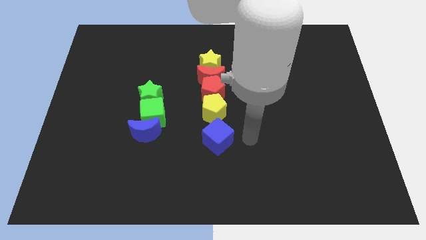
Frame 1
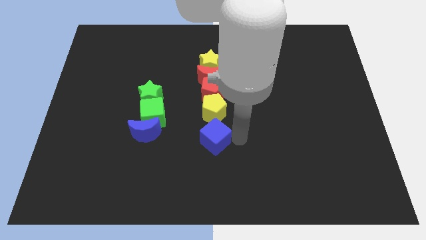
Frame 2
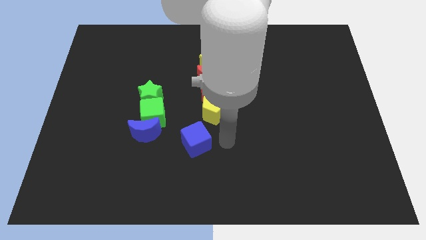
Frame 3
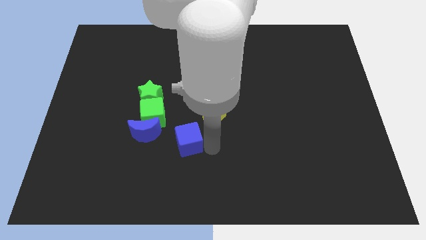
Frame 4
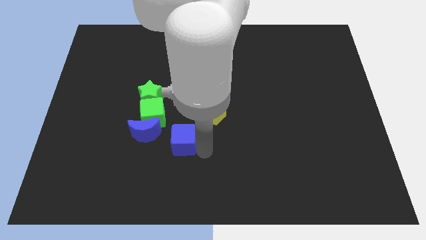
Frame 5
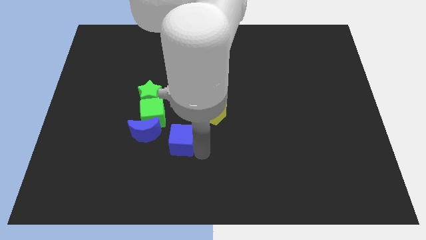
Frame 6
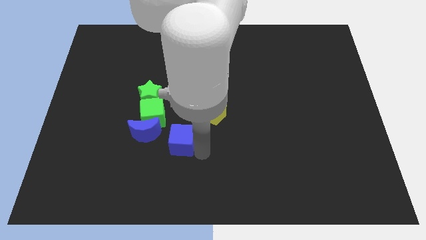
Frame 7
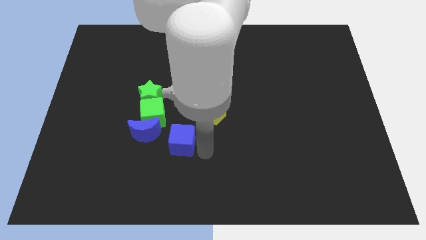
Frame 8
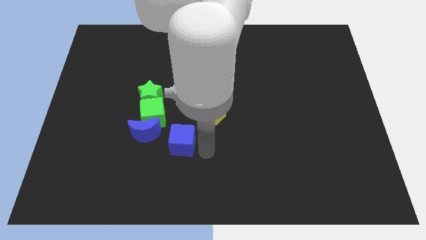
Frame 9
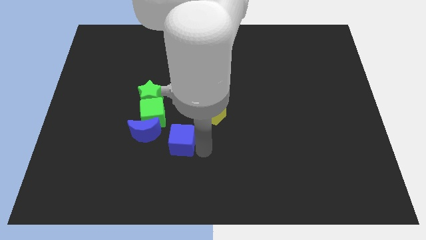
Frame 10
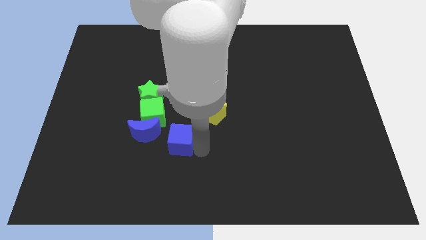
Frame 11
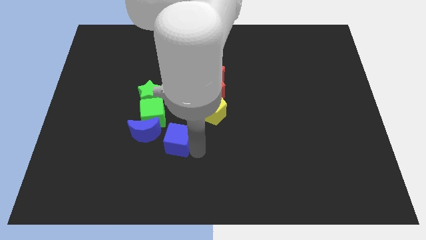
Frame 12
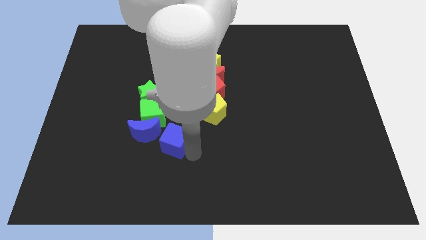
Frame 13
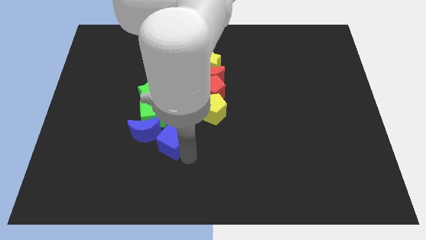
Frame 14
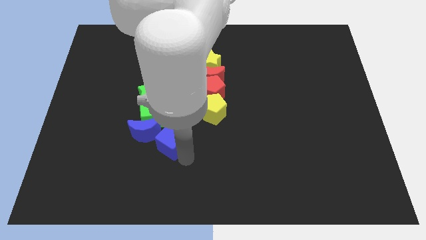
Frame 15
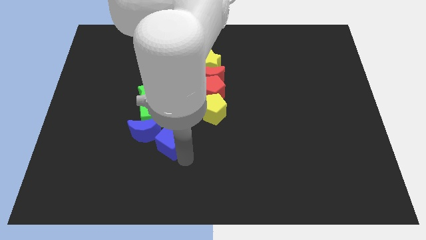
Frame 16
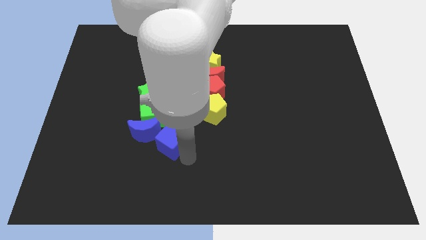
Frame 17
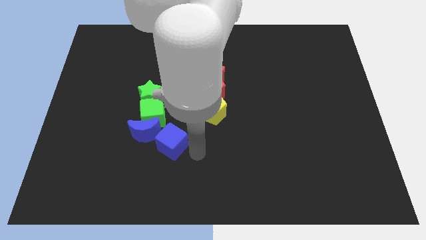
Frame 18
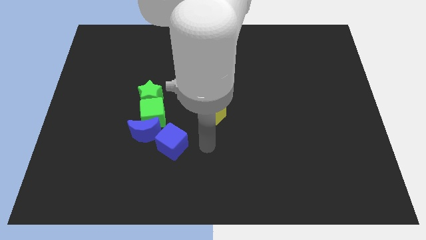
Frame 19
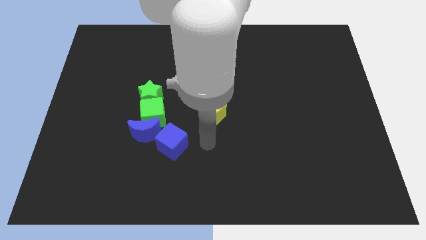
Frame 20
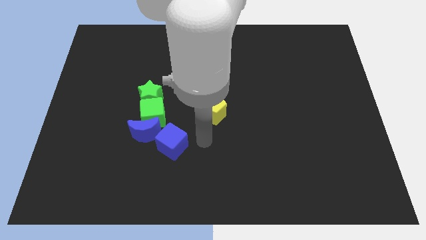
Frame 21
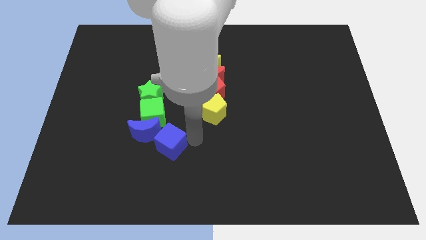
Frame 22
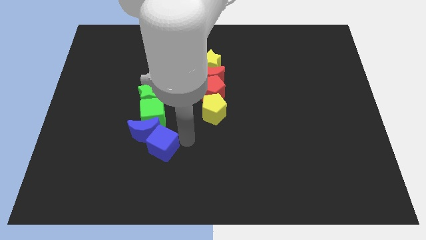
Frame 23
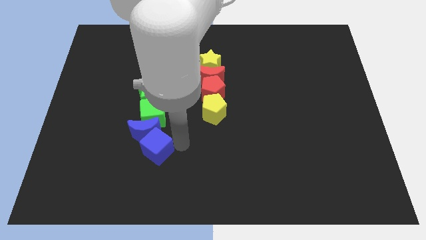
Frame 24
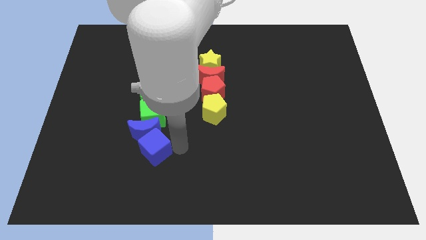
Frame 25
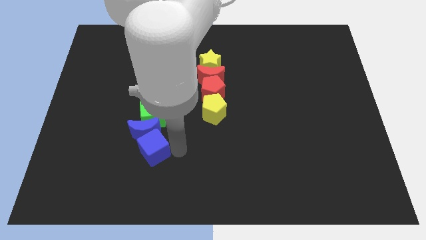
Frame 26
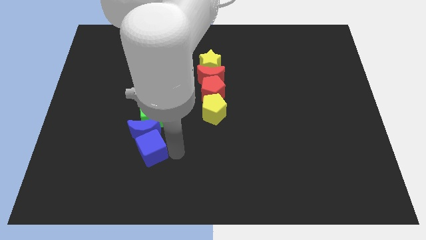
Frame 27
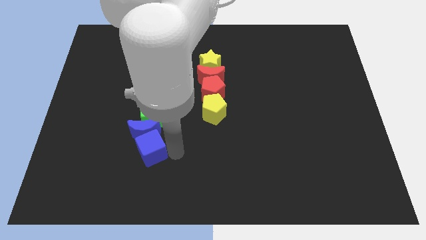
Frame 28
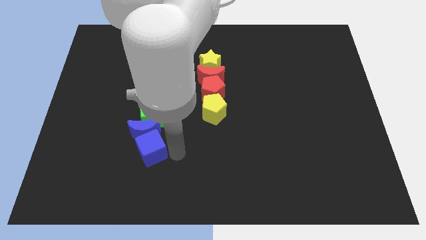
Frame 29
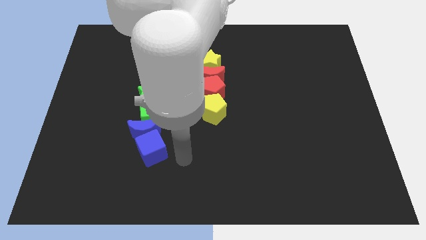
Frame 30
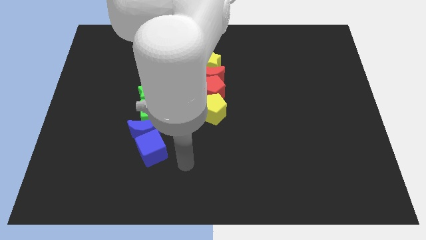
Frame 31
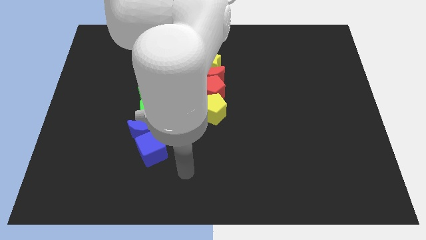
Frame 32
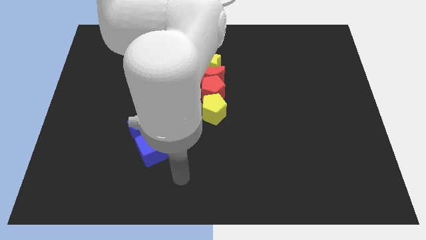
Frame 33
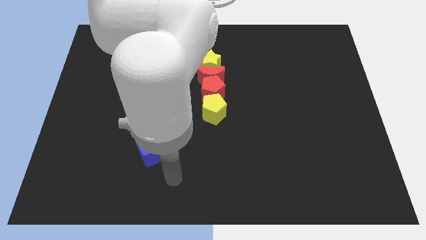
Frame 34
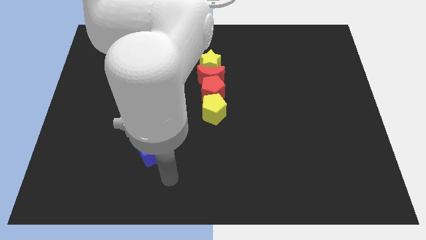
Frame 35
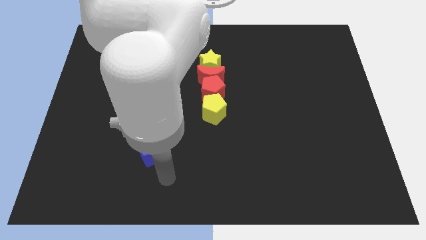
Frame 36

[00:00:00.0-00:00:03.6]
place the blue cube below the blue crescent

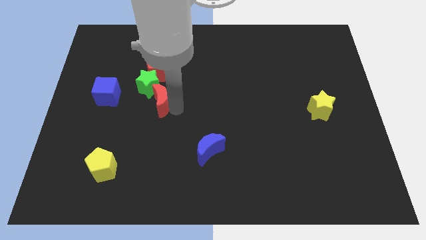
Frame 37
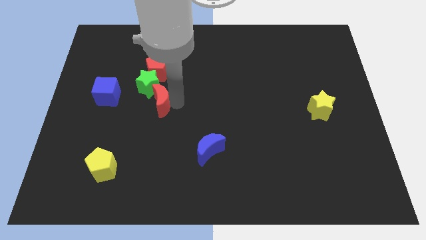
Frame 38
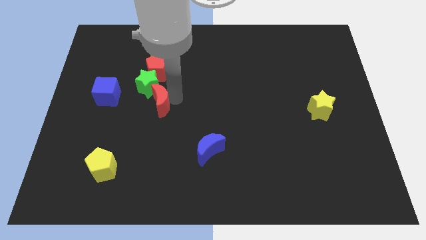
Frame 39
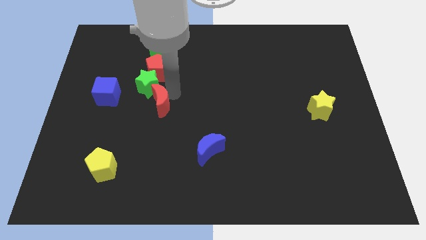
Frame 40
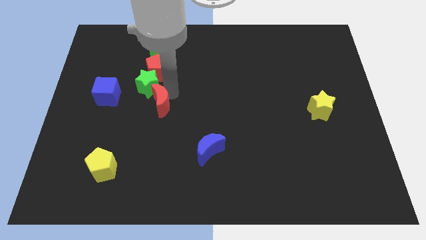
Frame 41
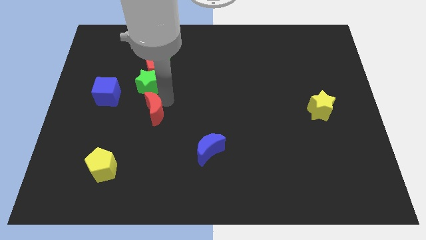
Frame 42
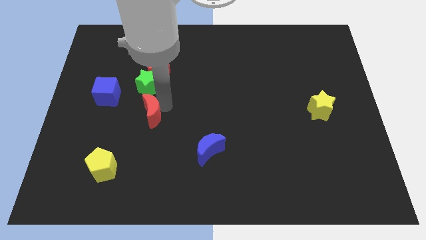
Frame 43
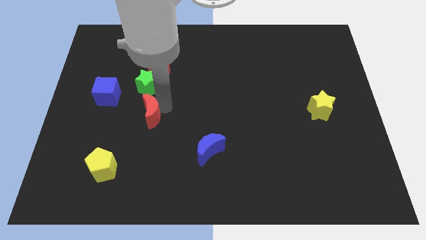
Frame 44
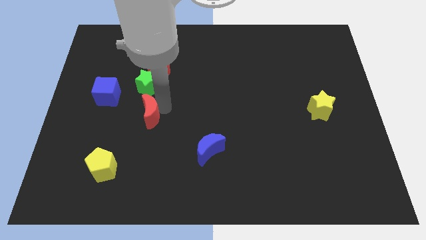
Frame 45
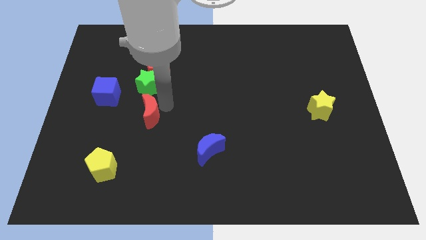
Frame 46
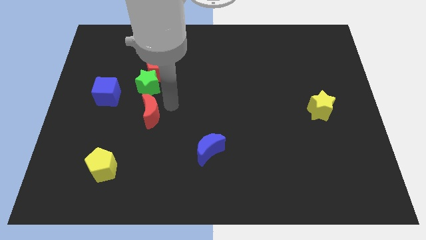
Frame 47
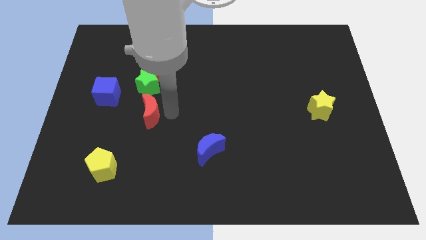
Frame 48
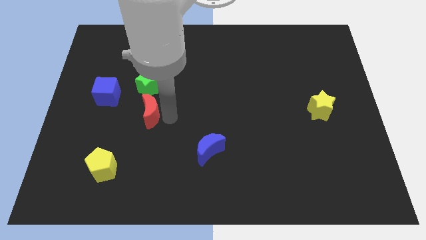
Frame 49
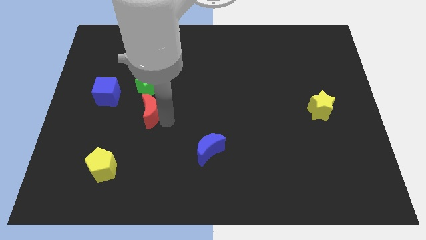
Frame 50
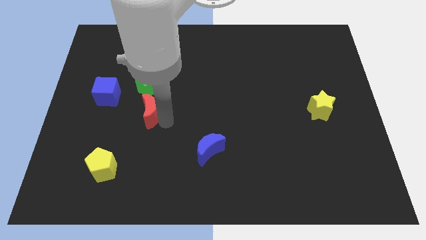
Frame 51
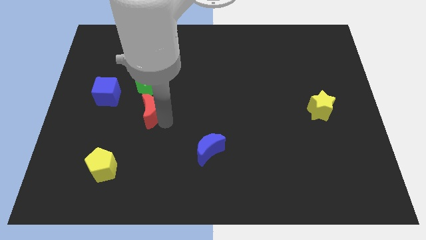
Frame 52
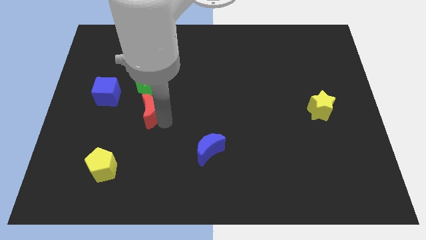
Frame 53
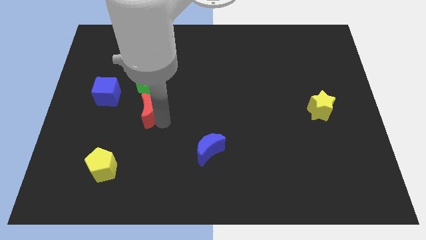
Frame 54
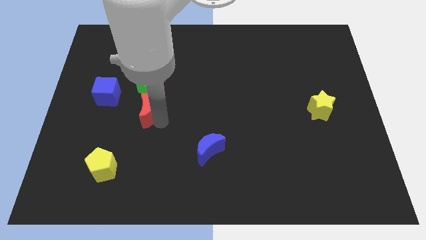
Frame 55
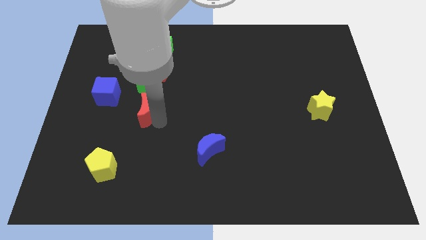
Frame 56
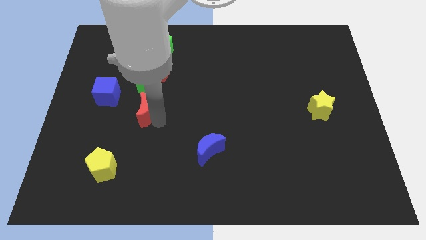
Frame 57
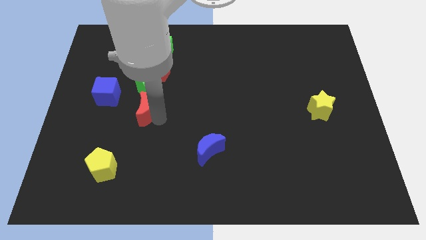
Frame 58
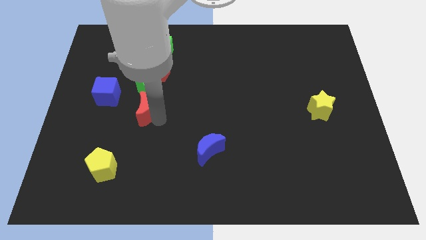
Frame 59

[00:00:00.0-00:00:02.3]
place red moon to the bottom of green star

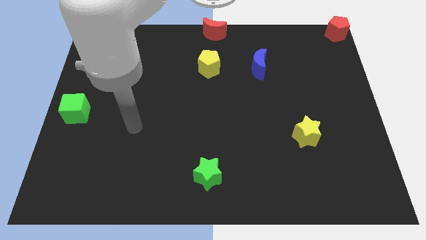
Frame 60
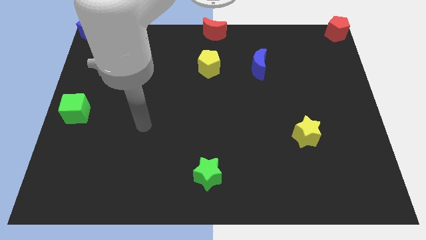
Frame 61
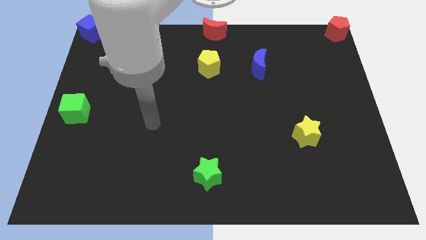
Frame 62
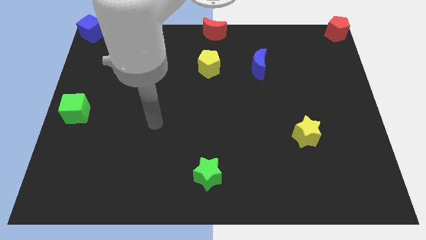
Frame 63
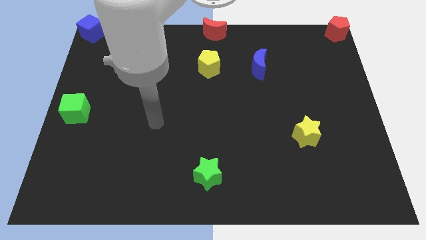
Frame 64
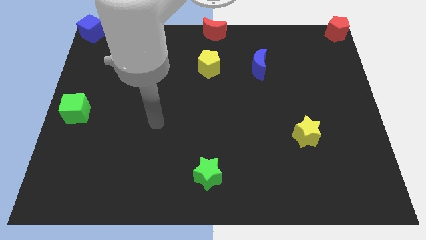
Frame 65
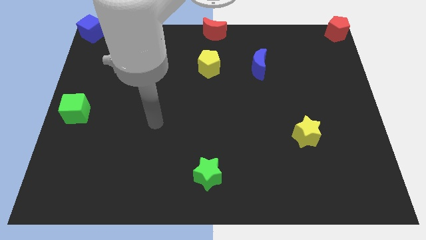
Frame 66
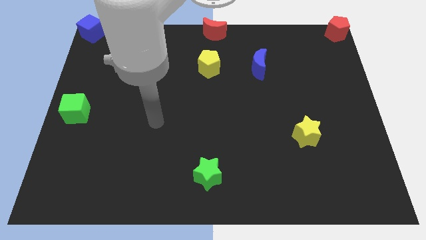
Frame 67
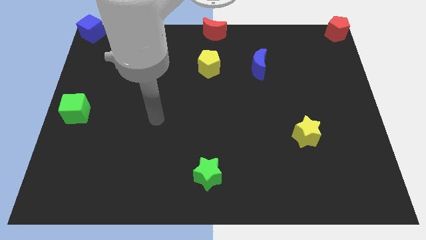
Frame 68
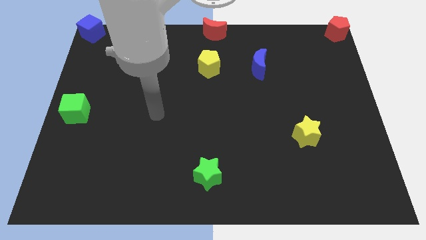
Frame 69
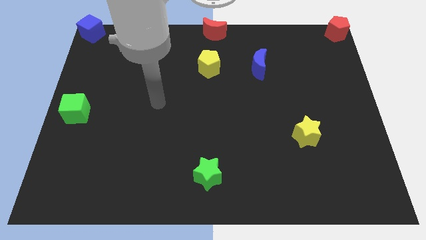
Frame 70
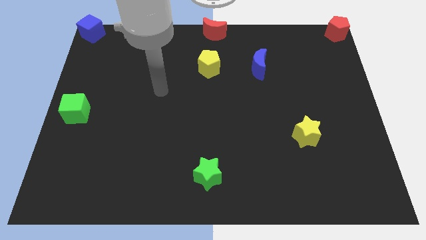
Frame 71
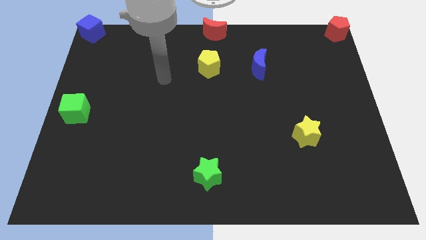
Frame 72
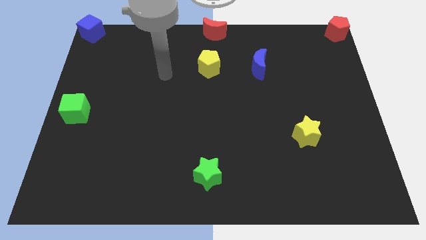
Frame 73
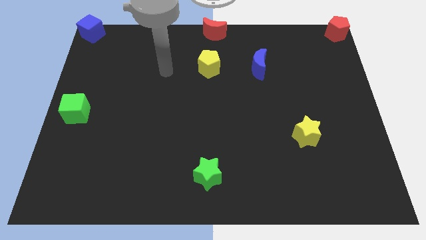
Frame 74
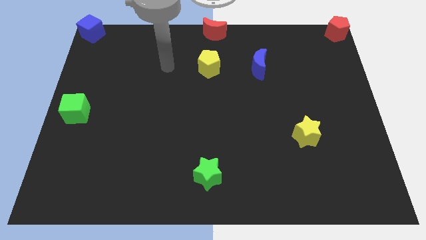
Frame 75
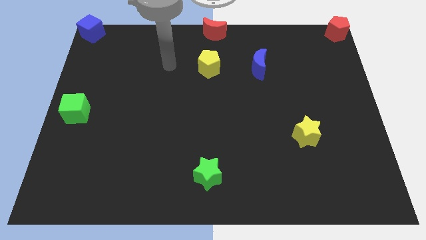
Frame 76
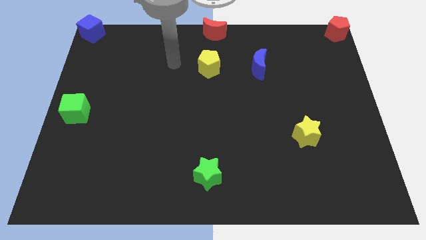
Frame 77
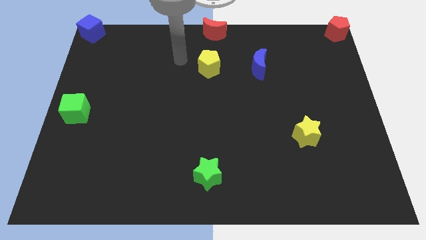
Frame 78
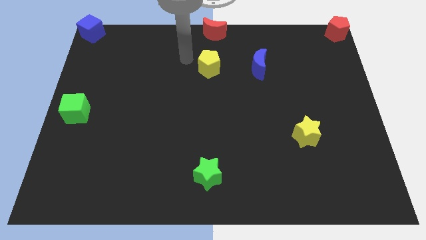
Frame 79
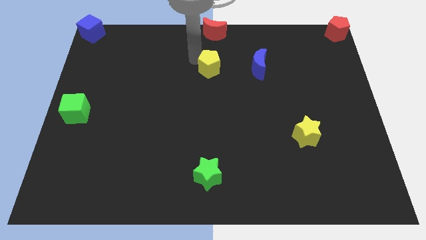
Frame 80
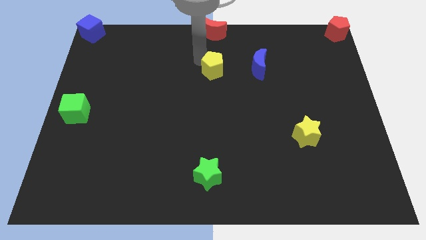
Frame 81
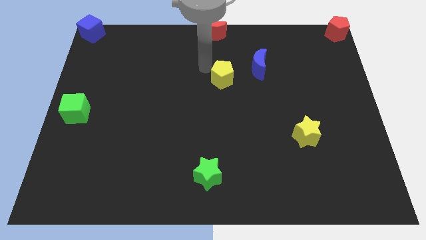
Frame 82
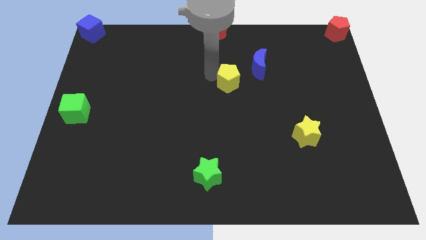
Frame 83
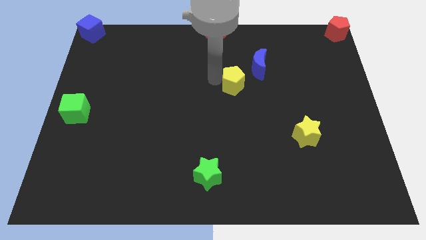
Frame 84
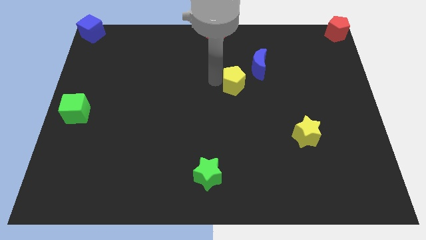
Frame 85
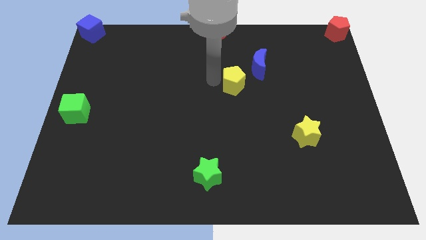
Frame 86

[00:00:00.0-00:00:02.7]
move the yellow pentagon to left side of the blue moon

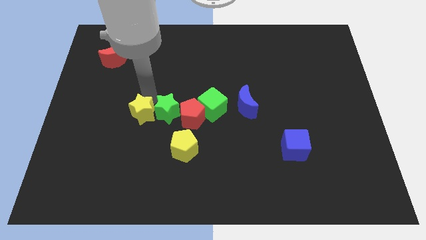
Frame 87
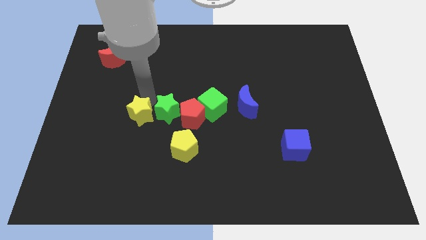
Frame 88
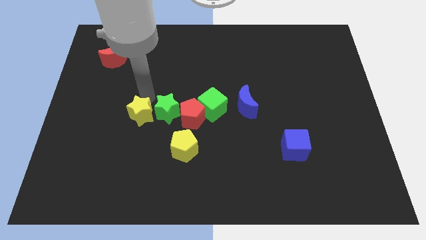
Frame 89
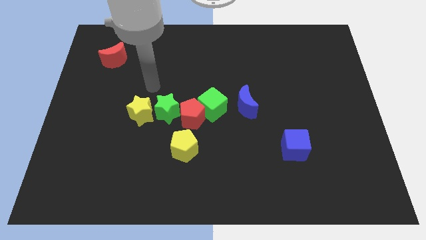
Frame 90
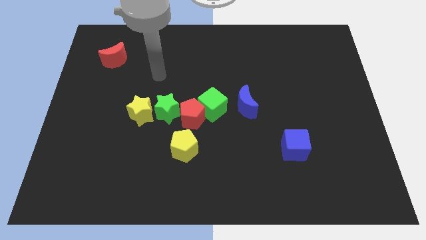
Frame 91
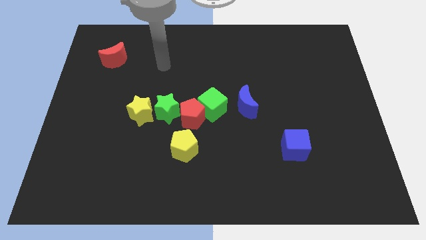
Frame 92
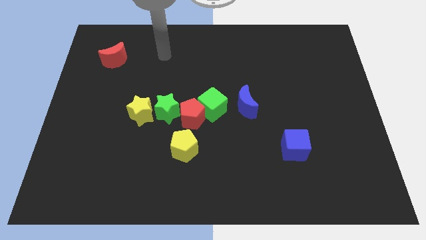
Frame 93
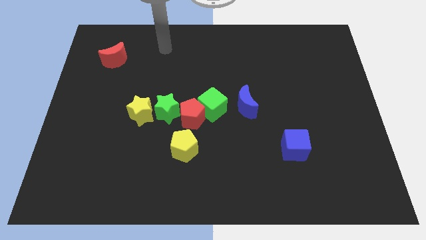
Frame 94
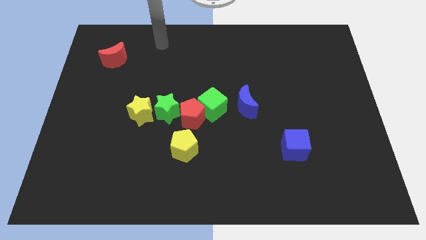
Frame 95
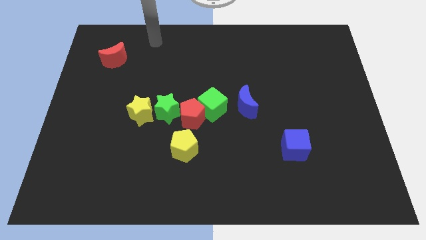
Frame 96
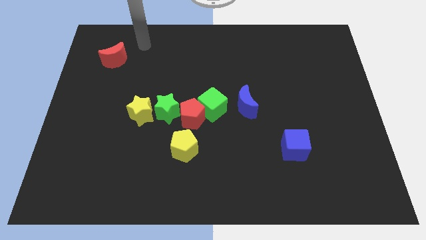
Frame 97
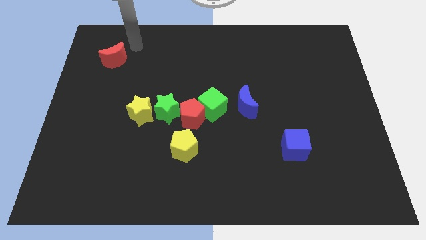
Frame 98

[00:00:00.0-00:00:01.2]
move your arm to the right of the red crescent
